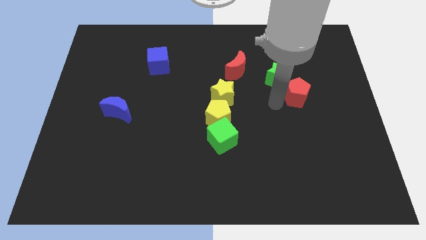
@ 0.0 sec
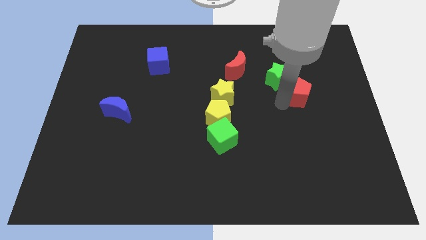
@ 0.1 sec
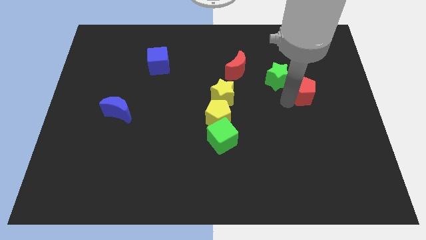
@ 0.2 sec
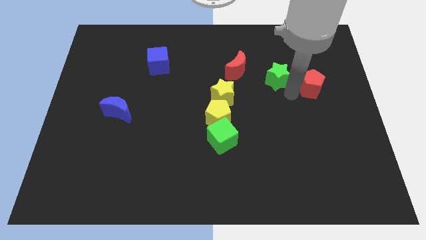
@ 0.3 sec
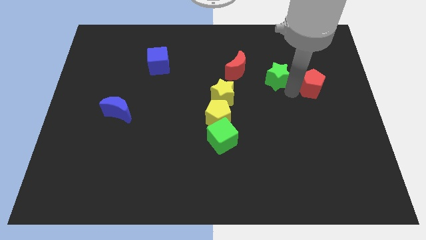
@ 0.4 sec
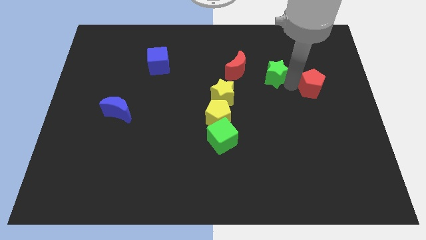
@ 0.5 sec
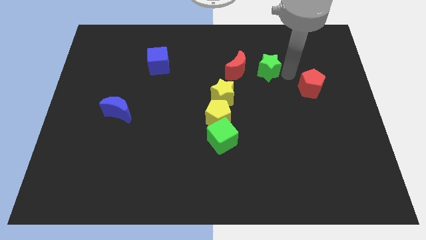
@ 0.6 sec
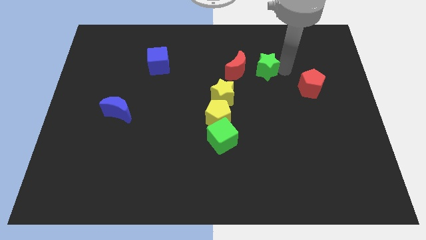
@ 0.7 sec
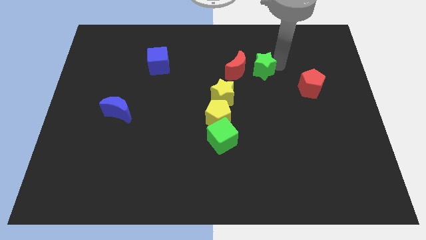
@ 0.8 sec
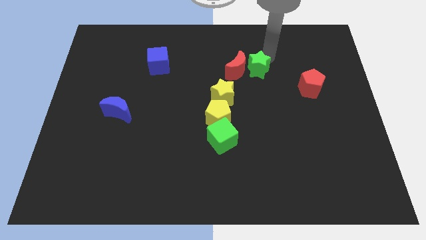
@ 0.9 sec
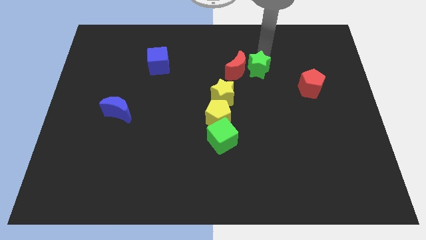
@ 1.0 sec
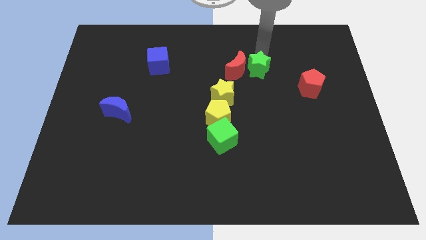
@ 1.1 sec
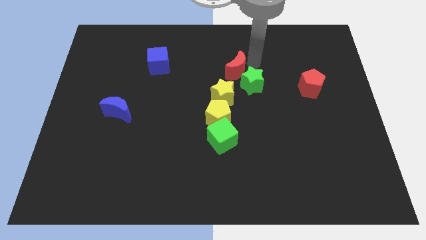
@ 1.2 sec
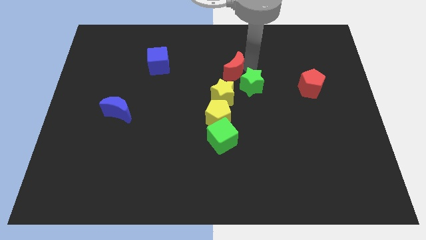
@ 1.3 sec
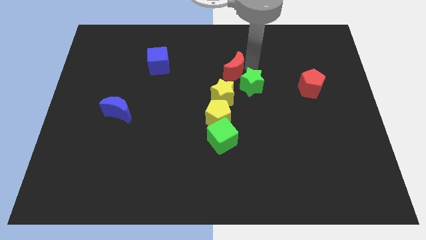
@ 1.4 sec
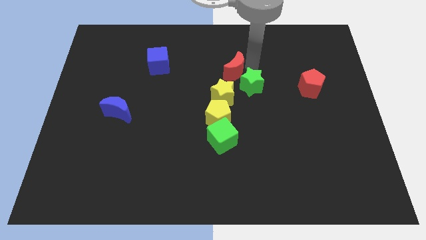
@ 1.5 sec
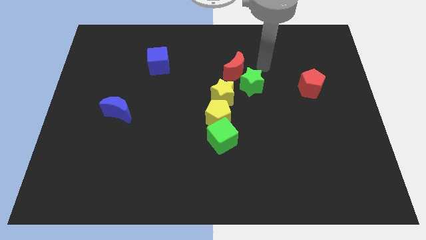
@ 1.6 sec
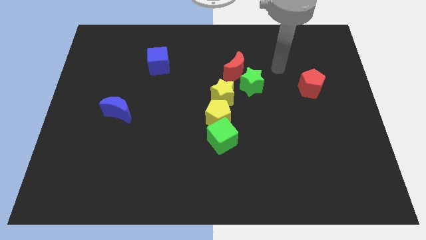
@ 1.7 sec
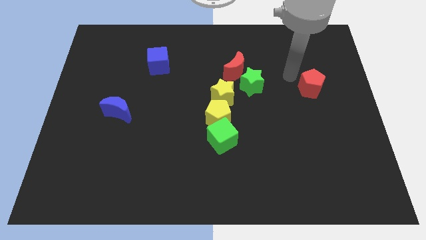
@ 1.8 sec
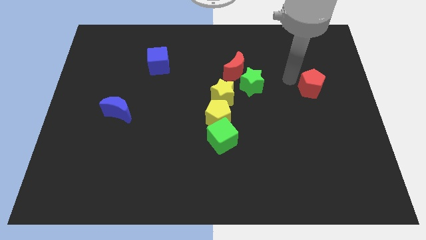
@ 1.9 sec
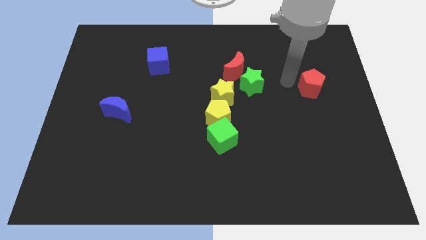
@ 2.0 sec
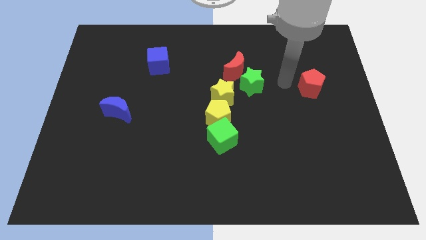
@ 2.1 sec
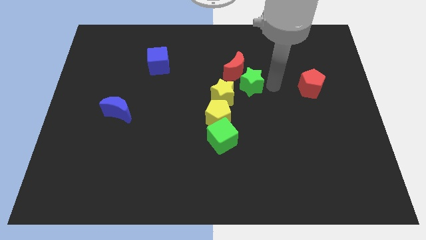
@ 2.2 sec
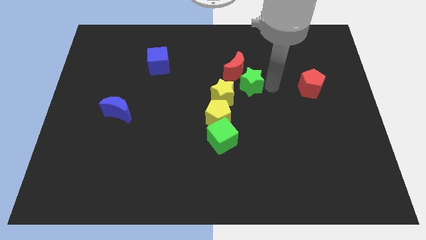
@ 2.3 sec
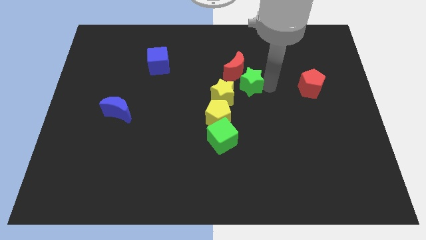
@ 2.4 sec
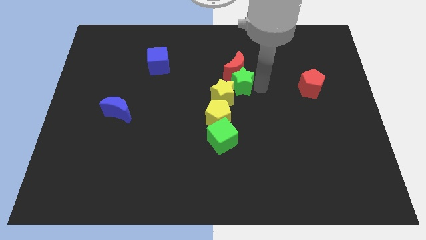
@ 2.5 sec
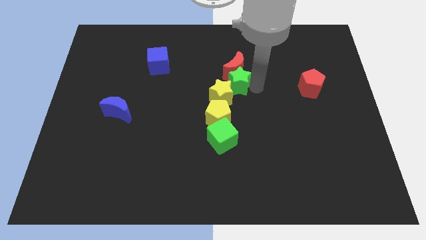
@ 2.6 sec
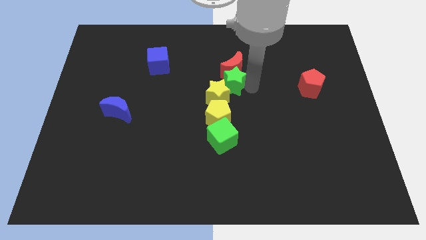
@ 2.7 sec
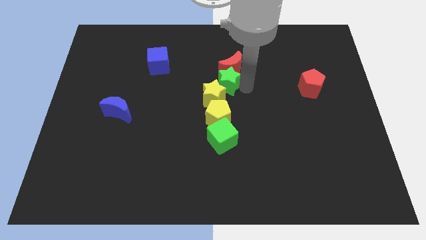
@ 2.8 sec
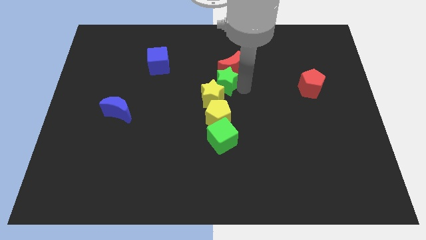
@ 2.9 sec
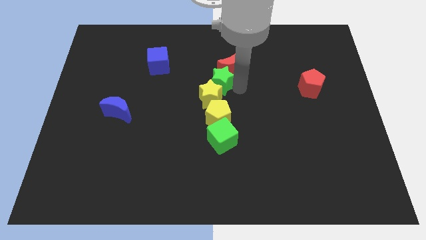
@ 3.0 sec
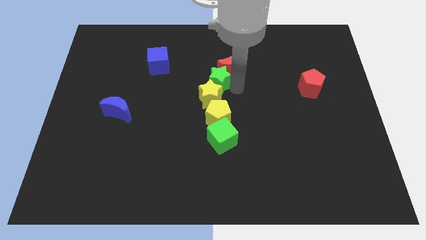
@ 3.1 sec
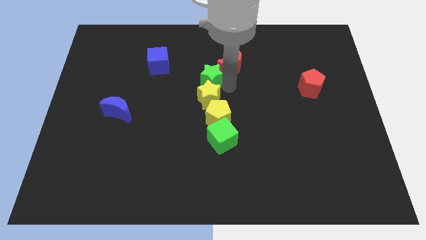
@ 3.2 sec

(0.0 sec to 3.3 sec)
move the green star diagonally above the yellow star

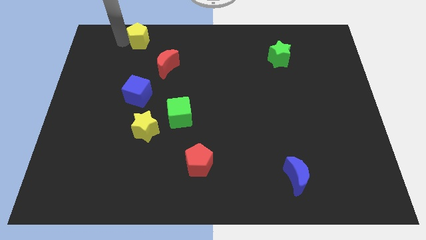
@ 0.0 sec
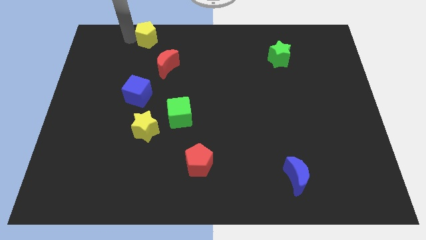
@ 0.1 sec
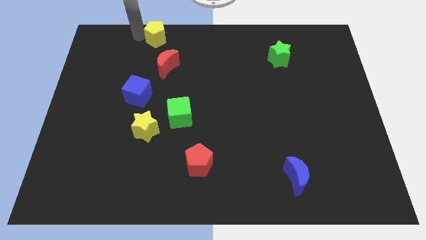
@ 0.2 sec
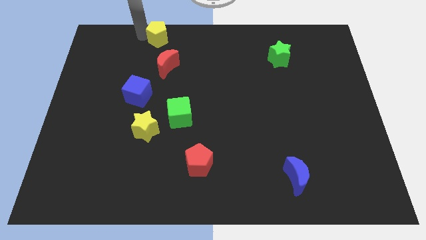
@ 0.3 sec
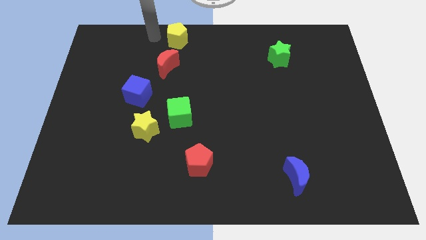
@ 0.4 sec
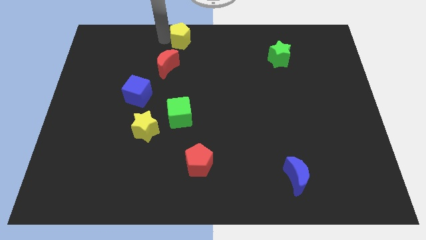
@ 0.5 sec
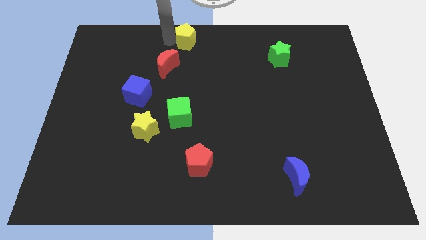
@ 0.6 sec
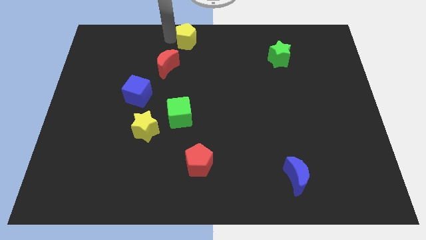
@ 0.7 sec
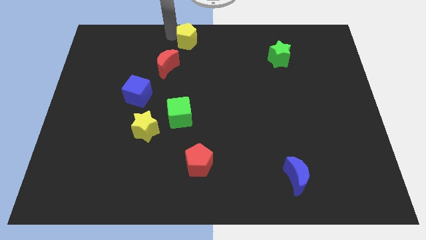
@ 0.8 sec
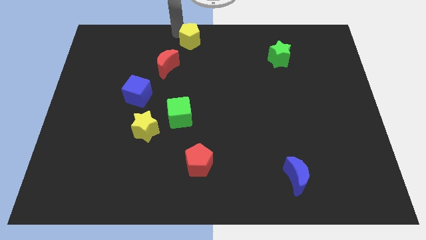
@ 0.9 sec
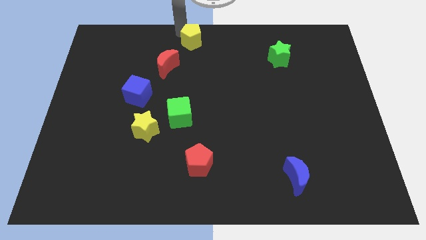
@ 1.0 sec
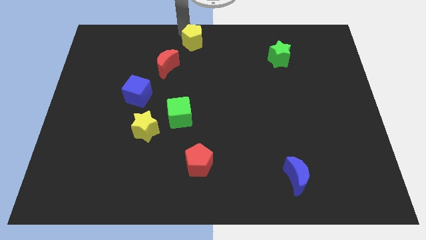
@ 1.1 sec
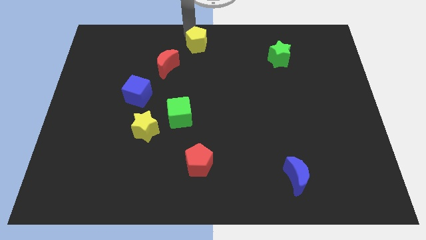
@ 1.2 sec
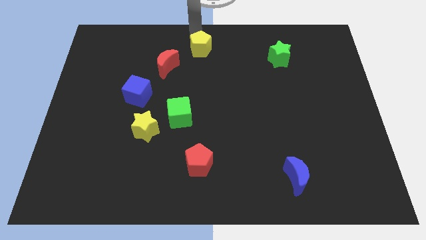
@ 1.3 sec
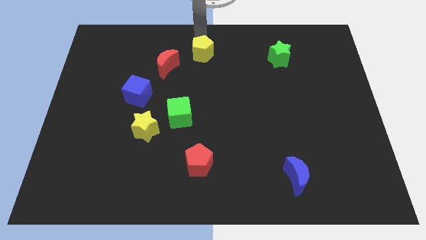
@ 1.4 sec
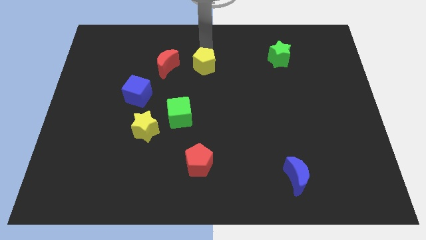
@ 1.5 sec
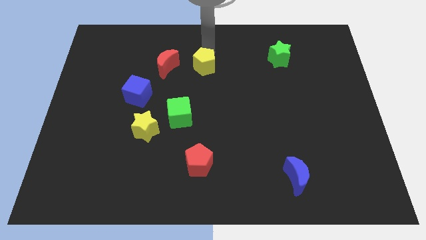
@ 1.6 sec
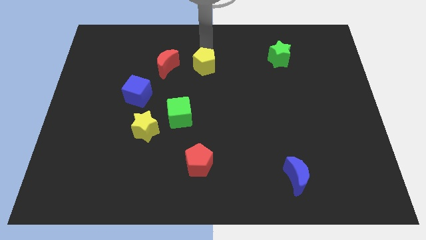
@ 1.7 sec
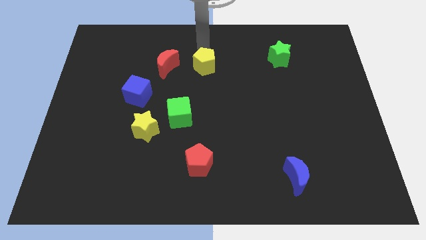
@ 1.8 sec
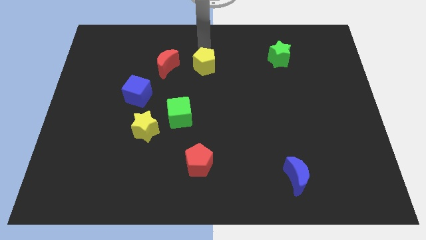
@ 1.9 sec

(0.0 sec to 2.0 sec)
place yellow pentagon to right of red moon

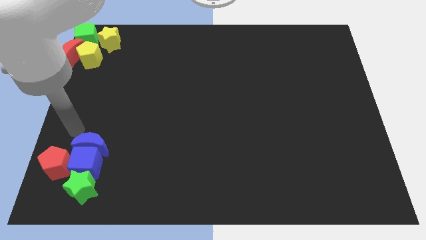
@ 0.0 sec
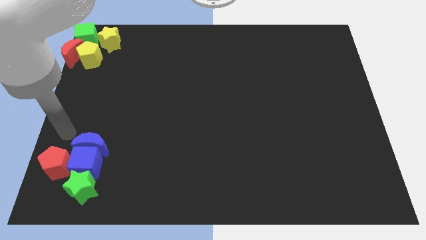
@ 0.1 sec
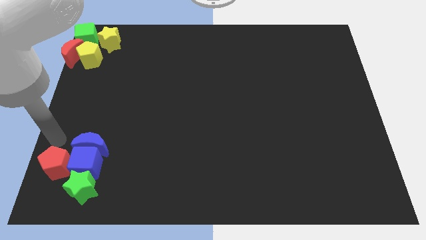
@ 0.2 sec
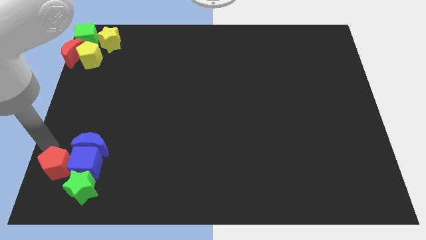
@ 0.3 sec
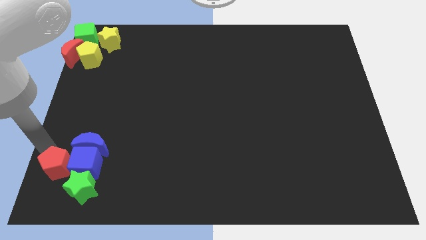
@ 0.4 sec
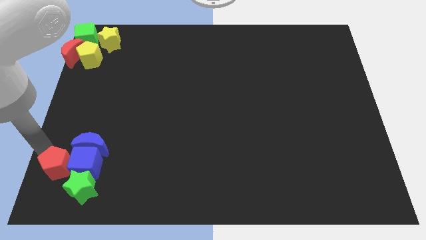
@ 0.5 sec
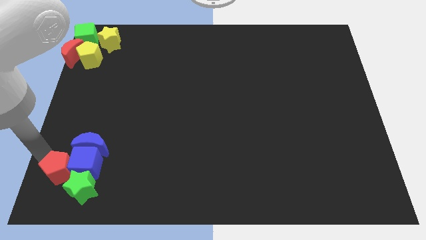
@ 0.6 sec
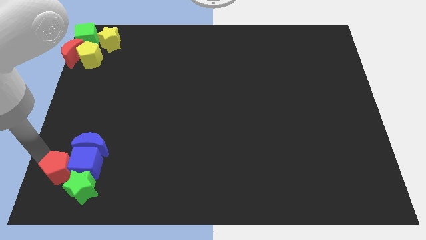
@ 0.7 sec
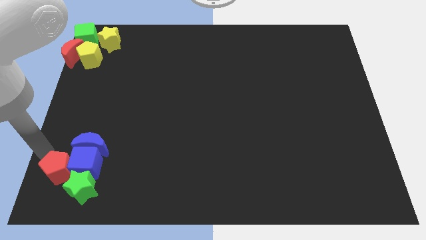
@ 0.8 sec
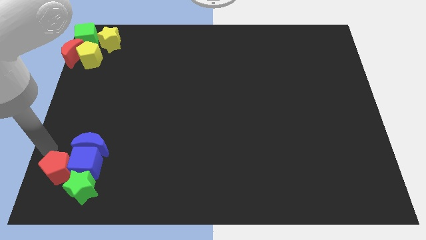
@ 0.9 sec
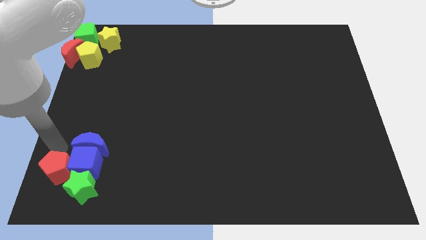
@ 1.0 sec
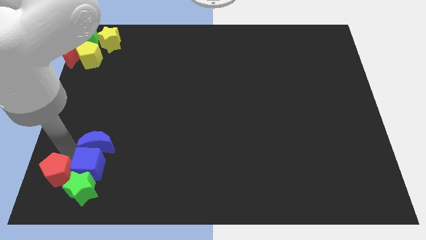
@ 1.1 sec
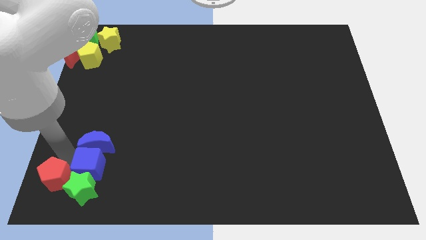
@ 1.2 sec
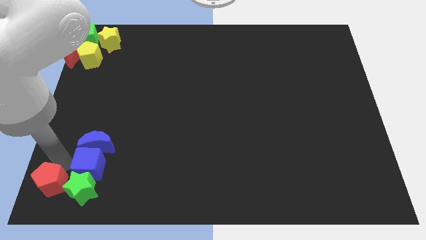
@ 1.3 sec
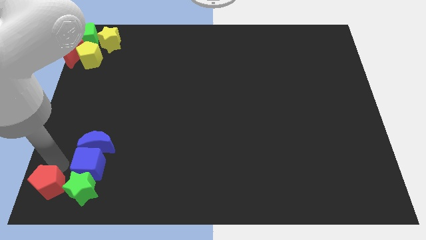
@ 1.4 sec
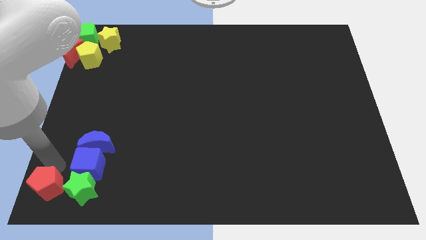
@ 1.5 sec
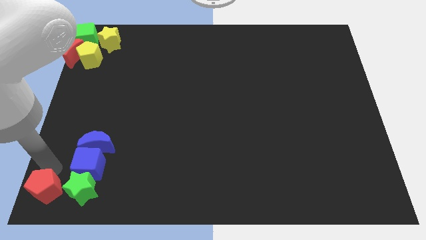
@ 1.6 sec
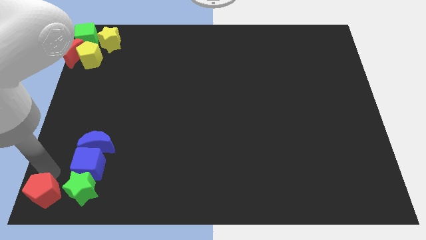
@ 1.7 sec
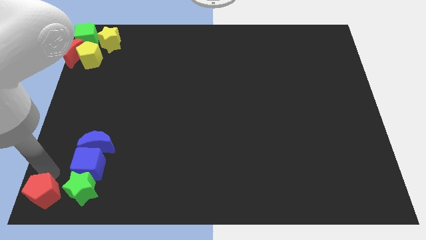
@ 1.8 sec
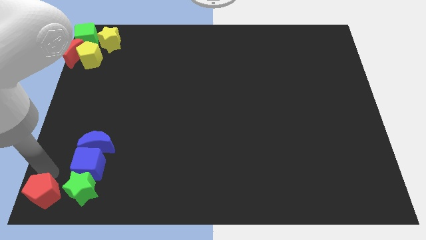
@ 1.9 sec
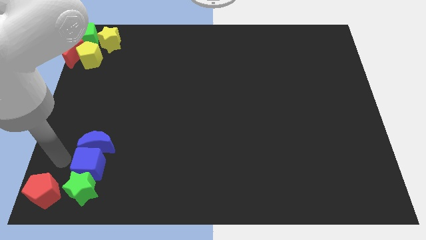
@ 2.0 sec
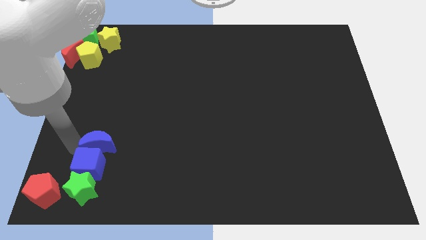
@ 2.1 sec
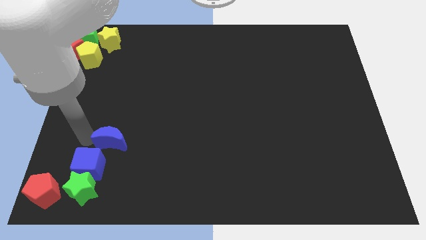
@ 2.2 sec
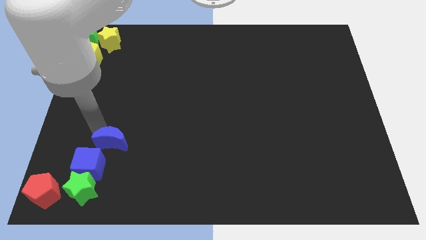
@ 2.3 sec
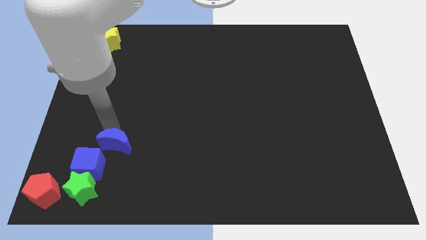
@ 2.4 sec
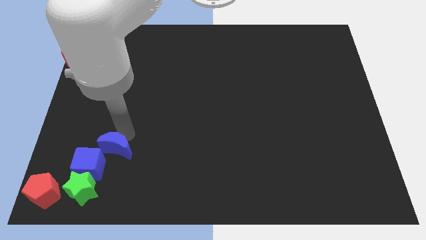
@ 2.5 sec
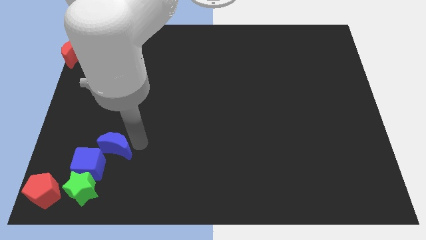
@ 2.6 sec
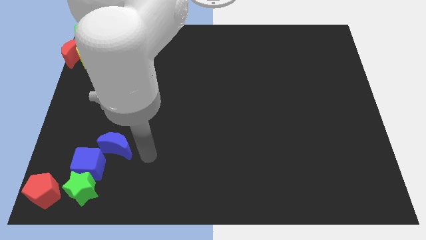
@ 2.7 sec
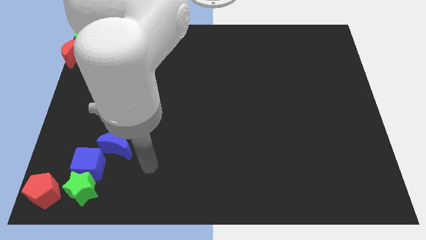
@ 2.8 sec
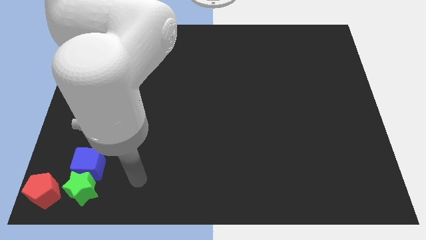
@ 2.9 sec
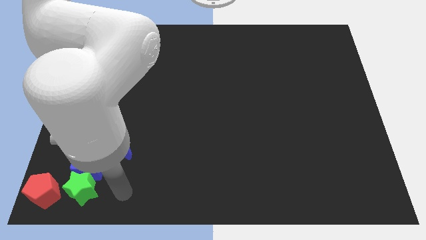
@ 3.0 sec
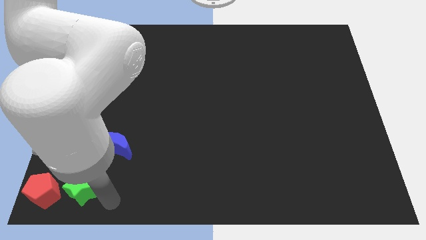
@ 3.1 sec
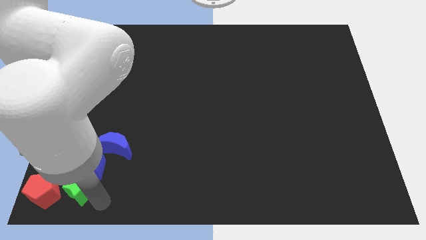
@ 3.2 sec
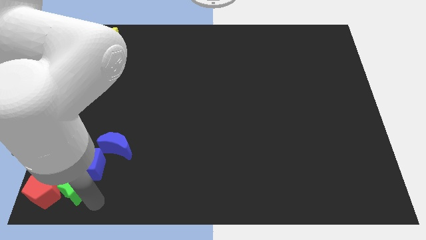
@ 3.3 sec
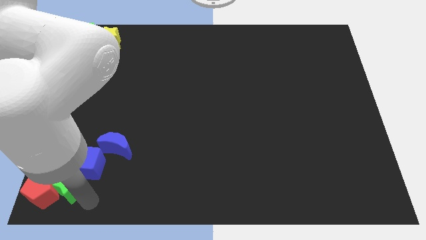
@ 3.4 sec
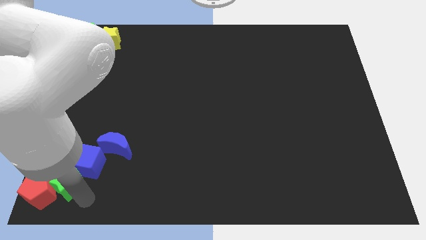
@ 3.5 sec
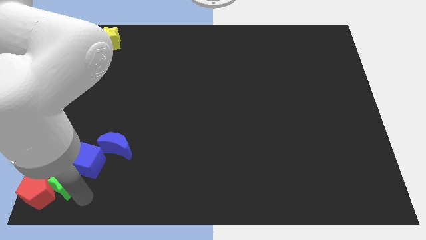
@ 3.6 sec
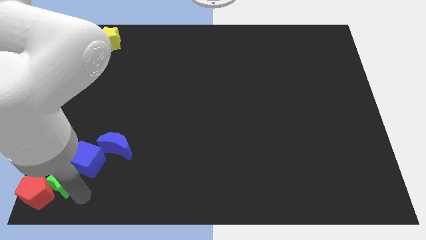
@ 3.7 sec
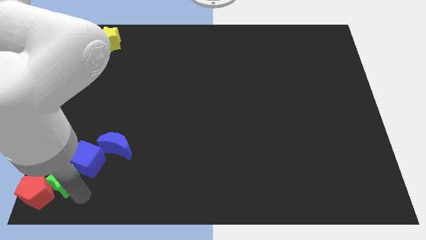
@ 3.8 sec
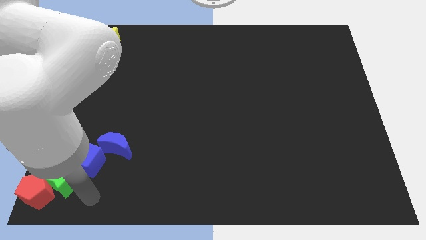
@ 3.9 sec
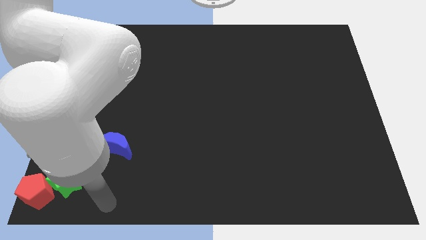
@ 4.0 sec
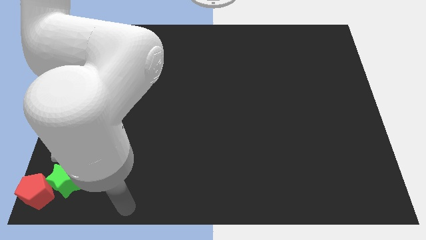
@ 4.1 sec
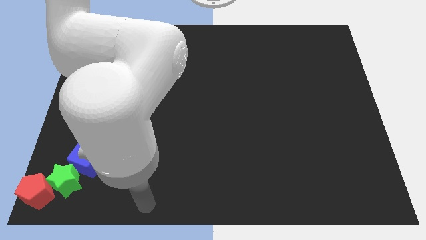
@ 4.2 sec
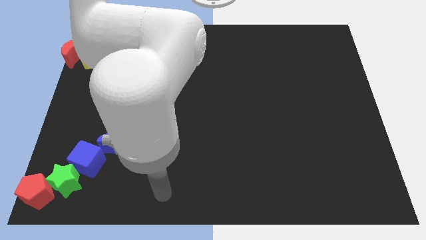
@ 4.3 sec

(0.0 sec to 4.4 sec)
move the red pentagon diagonally bottom left to the green star
